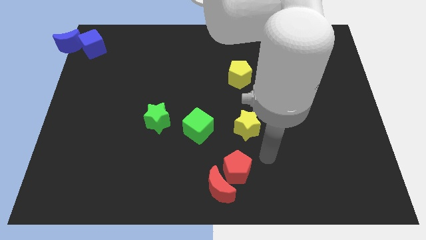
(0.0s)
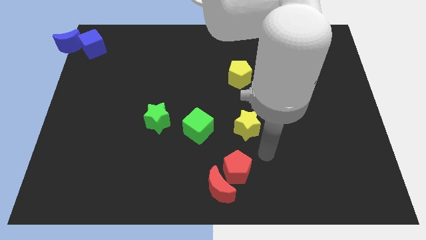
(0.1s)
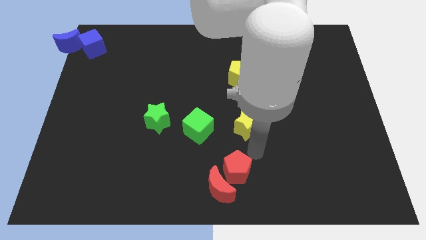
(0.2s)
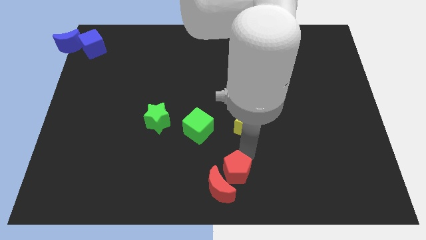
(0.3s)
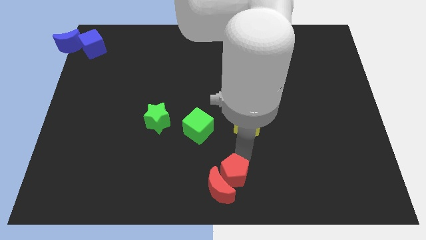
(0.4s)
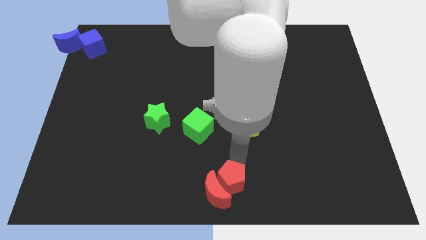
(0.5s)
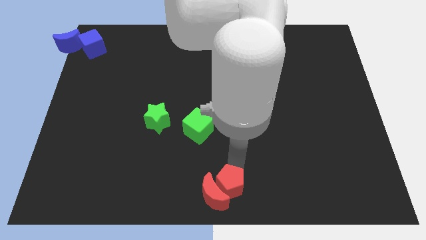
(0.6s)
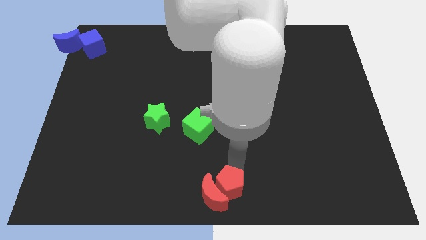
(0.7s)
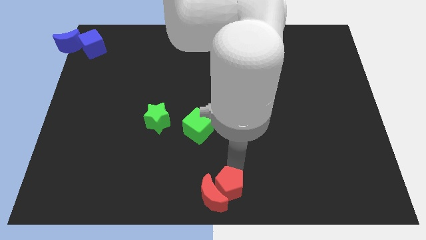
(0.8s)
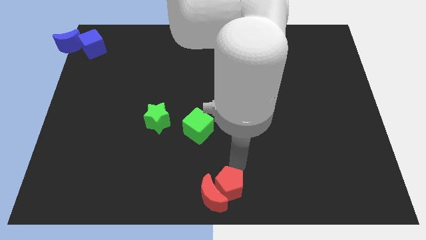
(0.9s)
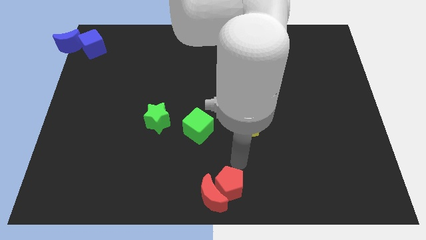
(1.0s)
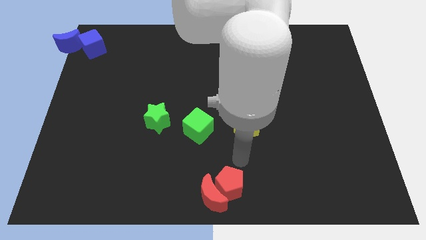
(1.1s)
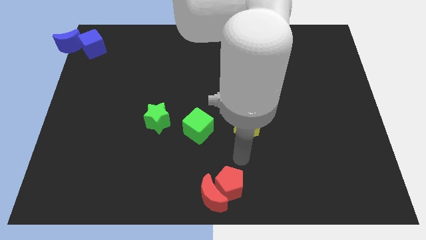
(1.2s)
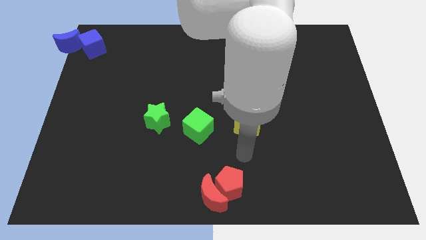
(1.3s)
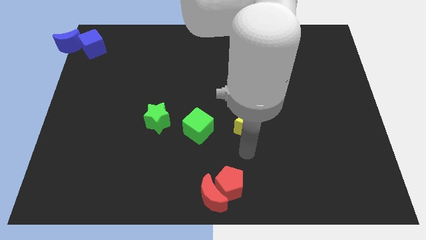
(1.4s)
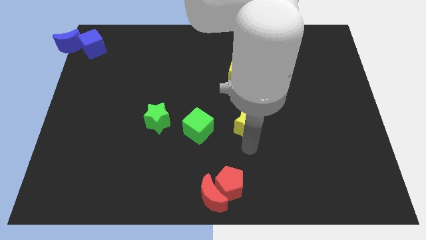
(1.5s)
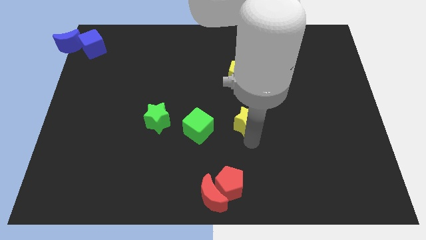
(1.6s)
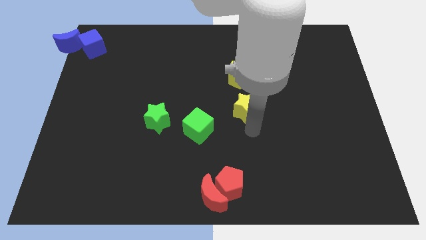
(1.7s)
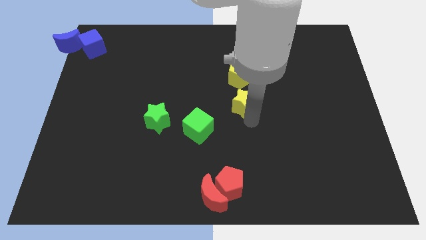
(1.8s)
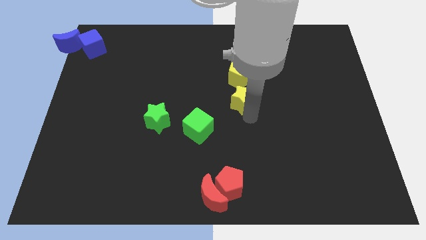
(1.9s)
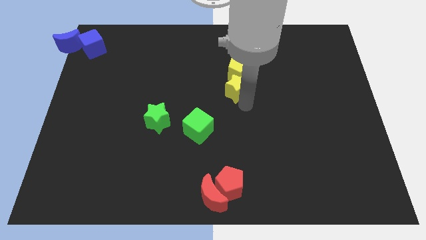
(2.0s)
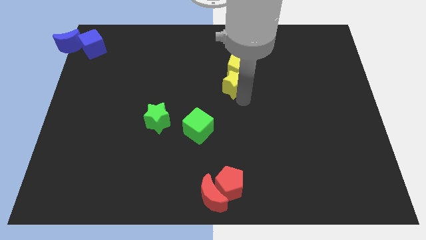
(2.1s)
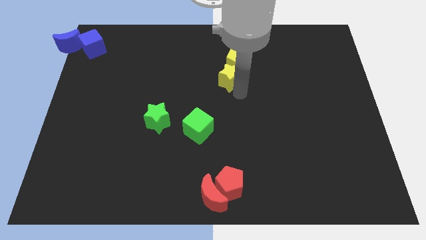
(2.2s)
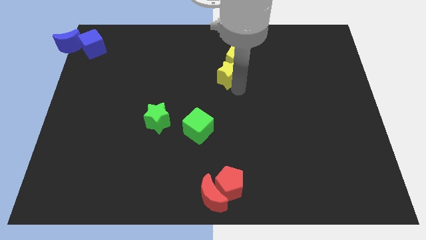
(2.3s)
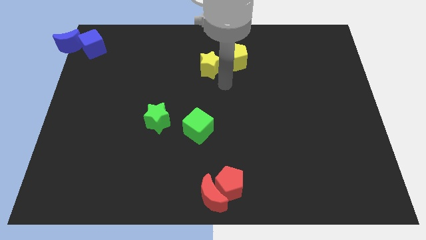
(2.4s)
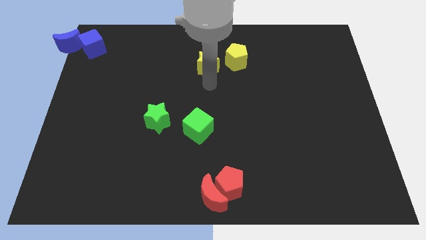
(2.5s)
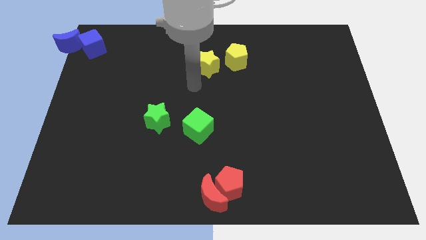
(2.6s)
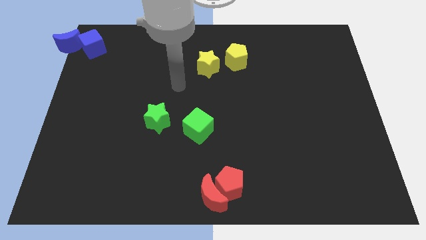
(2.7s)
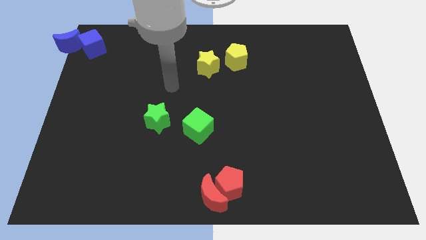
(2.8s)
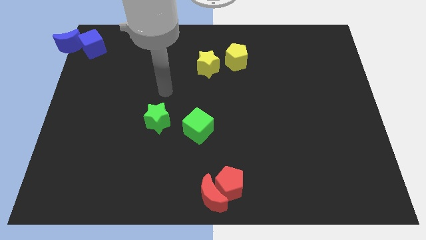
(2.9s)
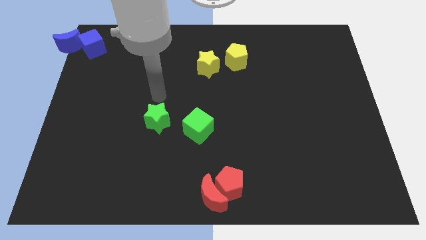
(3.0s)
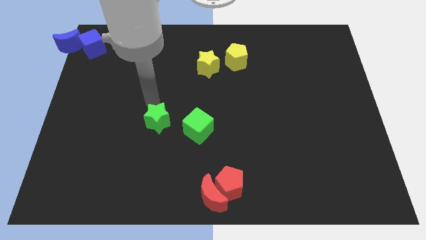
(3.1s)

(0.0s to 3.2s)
move the group of yellow blocks towards the top center

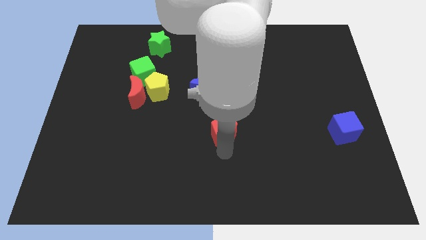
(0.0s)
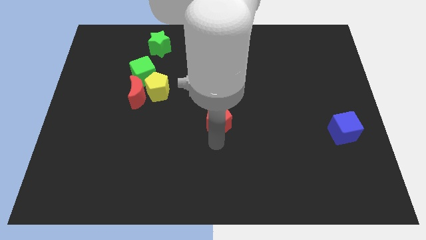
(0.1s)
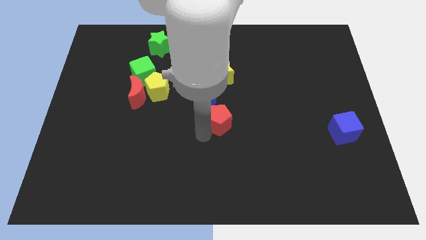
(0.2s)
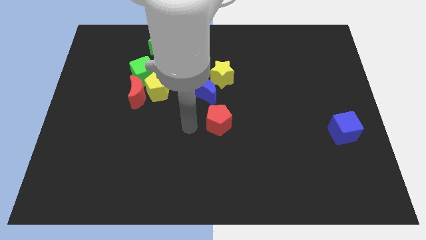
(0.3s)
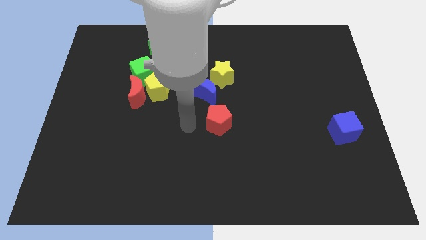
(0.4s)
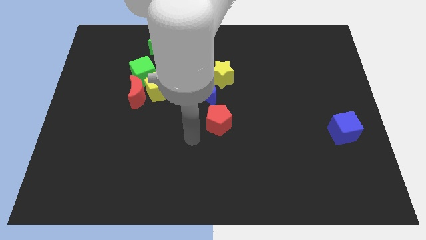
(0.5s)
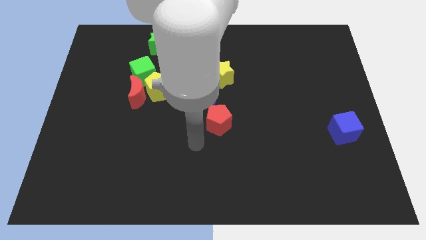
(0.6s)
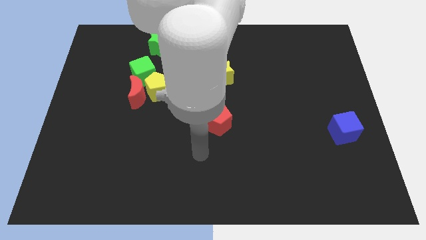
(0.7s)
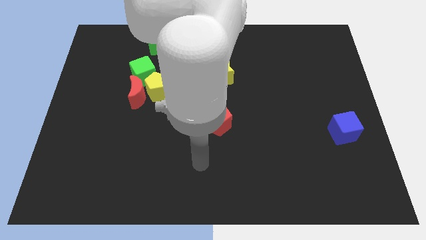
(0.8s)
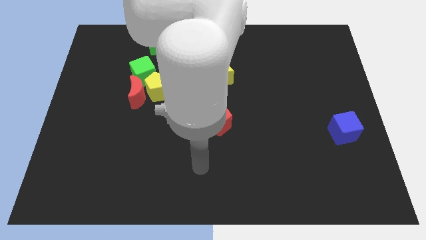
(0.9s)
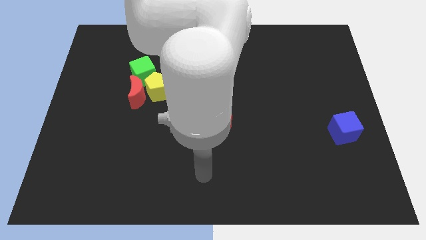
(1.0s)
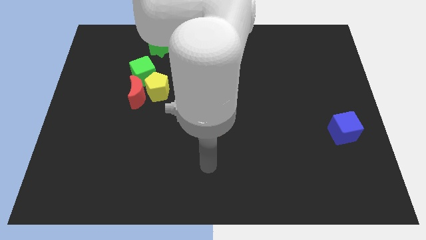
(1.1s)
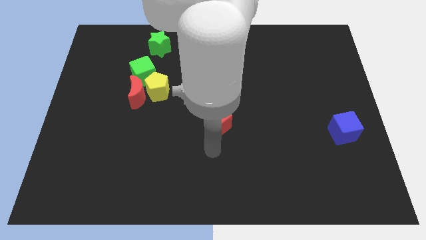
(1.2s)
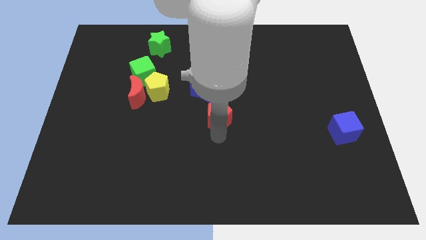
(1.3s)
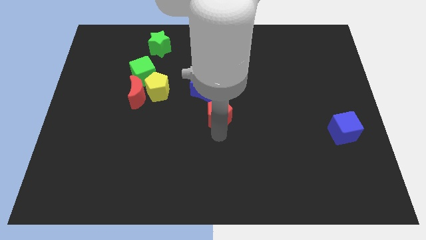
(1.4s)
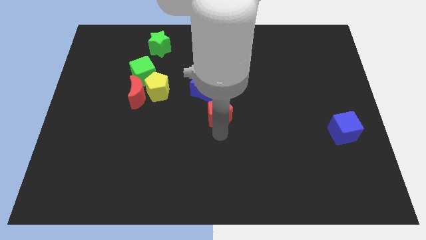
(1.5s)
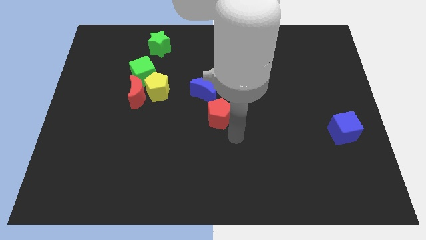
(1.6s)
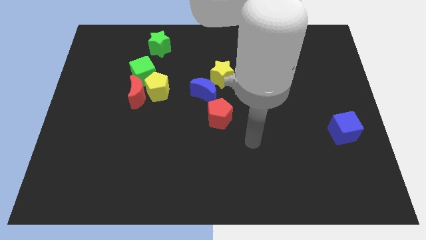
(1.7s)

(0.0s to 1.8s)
move the red pentagon towards the center

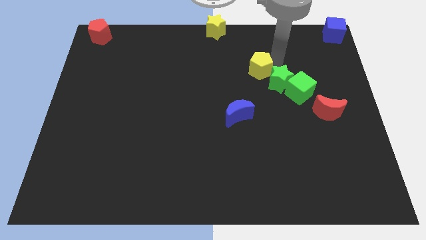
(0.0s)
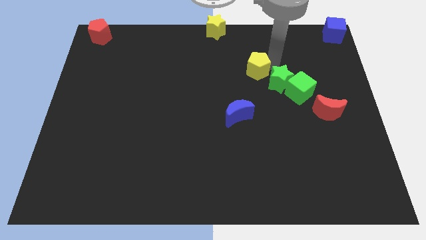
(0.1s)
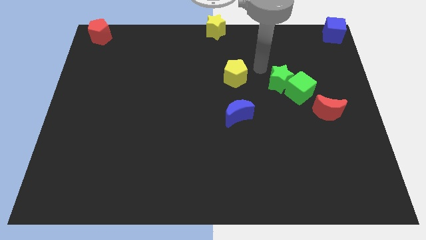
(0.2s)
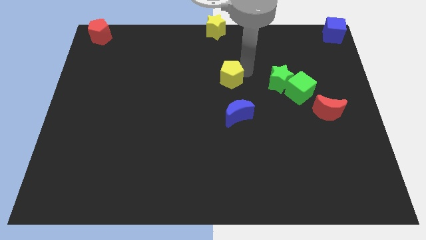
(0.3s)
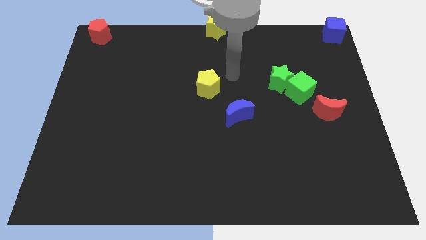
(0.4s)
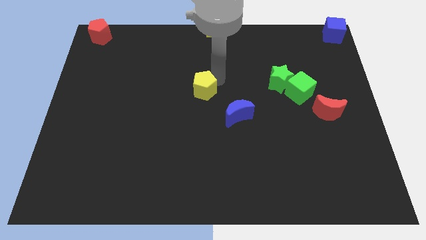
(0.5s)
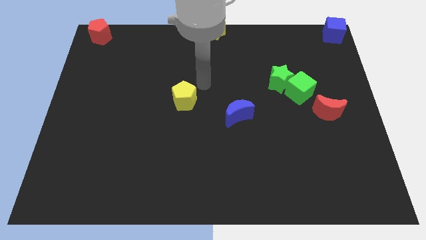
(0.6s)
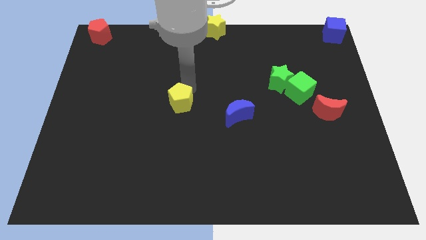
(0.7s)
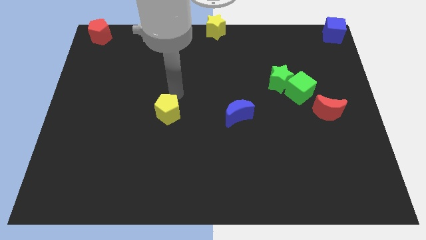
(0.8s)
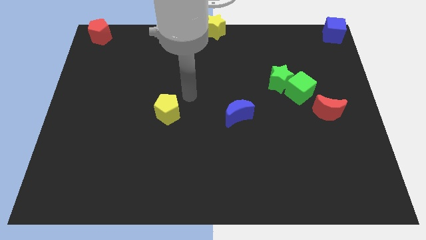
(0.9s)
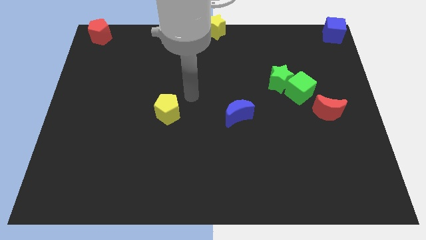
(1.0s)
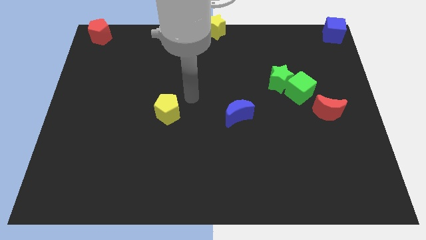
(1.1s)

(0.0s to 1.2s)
push the yellow pentagon left to the blue moon

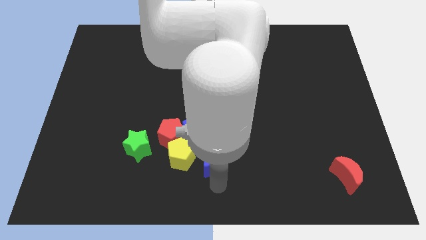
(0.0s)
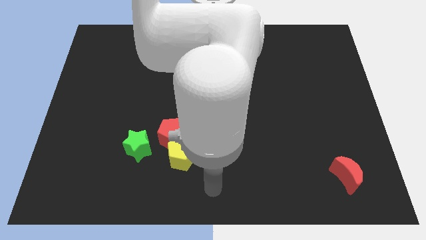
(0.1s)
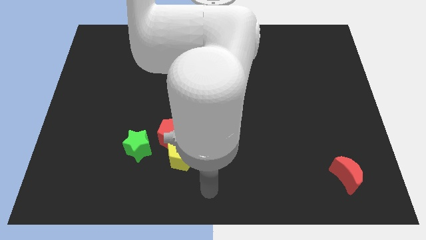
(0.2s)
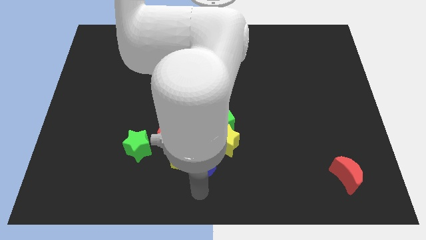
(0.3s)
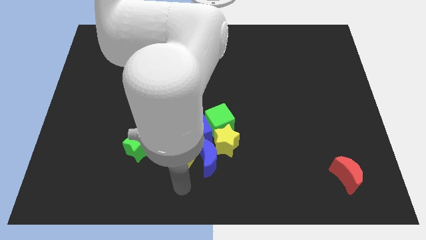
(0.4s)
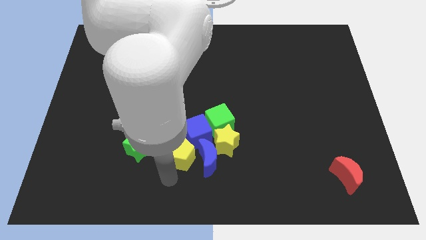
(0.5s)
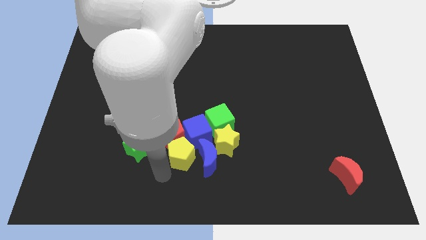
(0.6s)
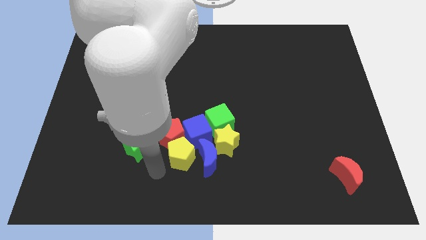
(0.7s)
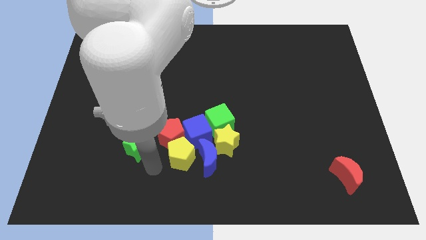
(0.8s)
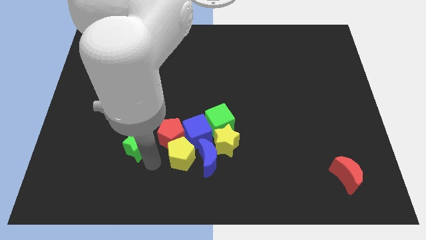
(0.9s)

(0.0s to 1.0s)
point your arm at the left side of the yellow pentagon

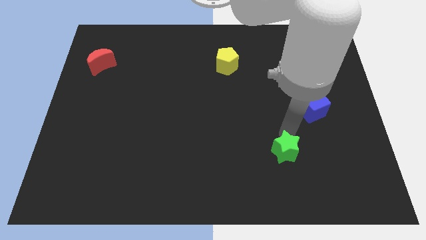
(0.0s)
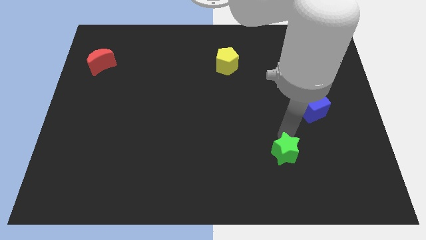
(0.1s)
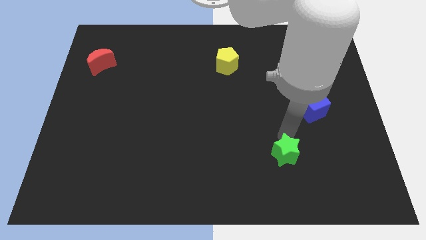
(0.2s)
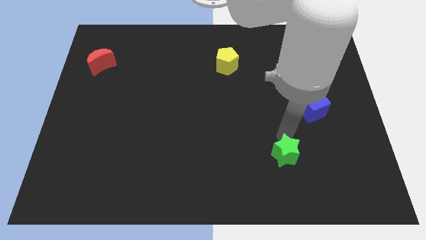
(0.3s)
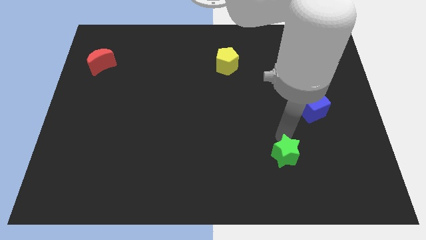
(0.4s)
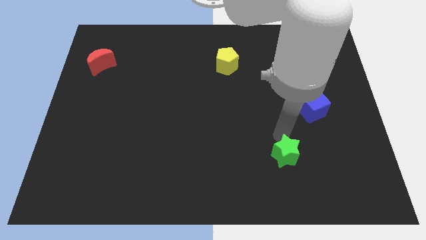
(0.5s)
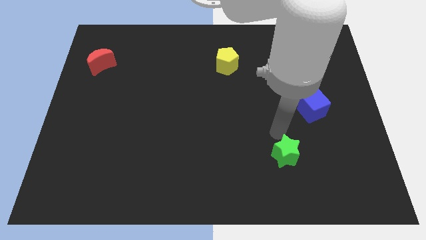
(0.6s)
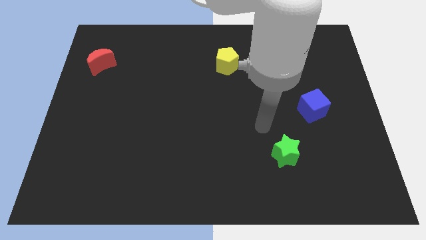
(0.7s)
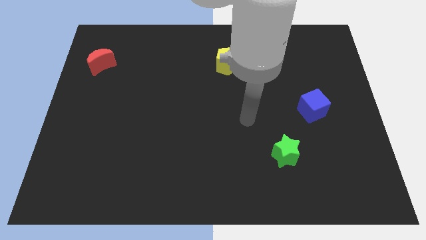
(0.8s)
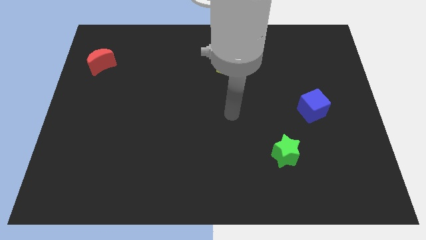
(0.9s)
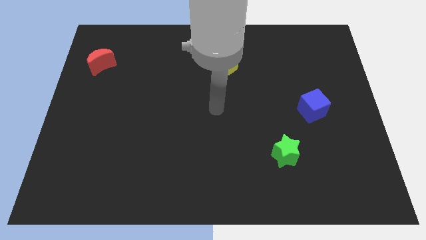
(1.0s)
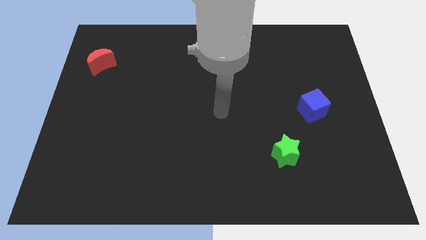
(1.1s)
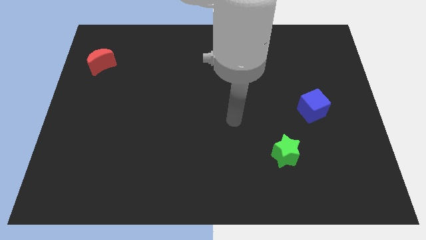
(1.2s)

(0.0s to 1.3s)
move your hand to the center of the board

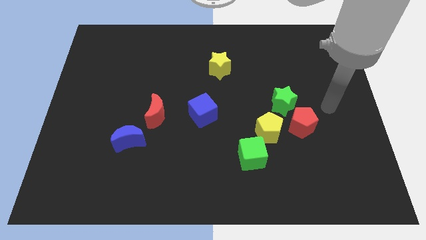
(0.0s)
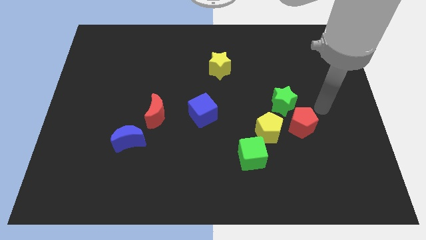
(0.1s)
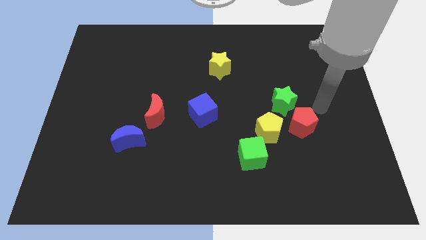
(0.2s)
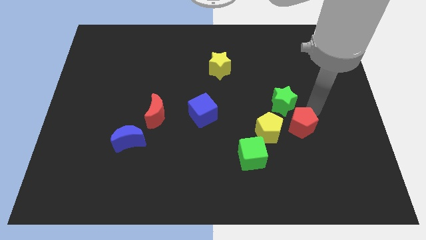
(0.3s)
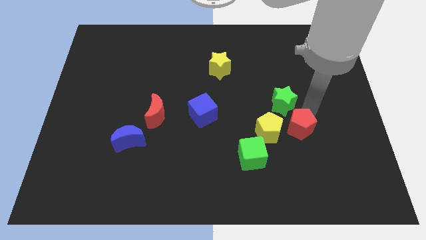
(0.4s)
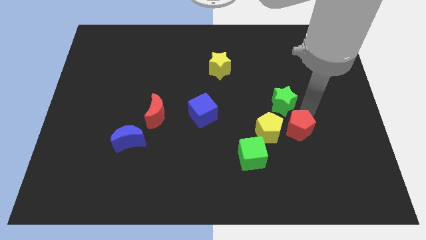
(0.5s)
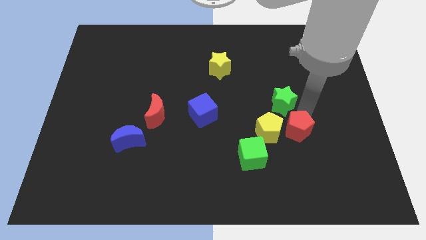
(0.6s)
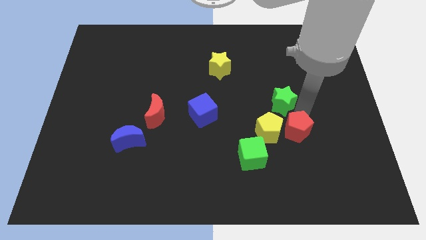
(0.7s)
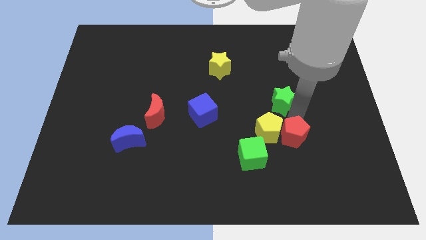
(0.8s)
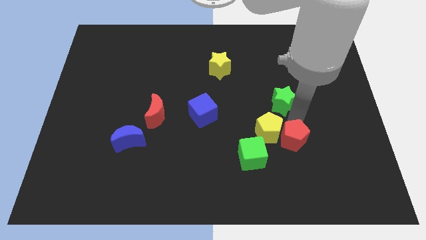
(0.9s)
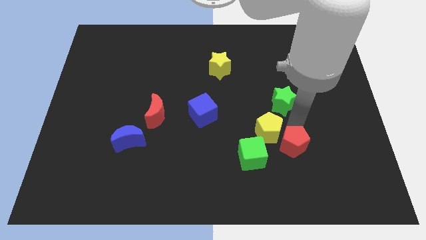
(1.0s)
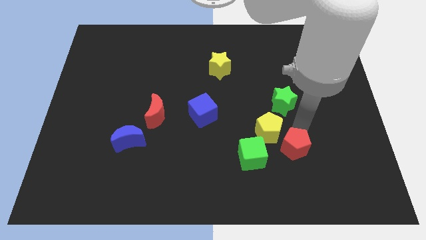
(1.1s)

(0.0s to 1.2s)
slide red pentagon slightly to the down
